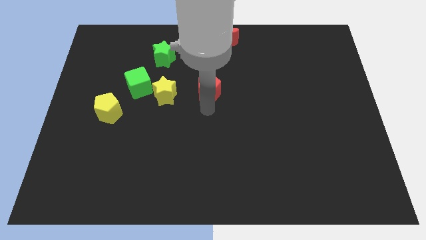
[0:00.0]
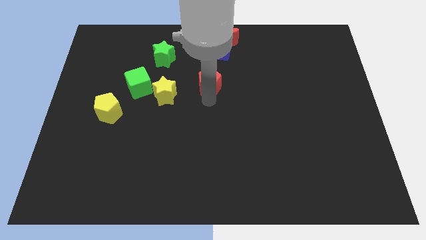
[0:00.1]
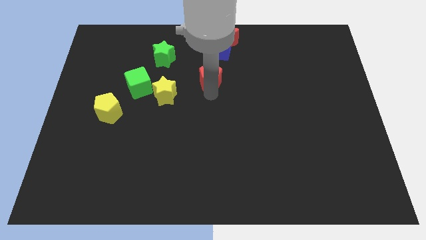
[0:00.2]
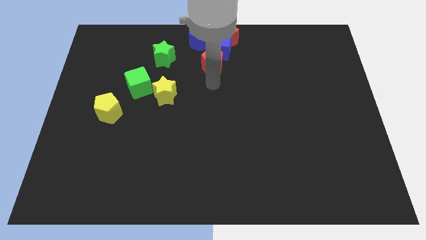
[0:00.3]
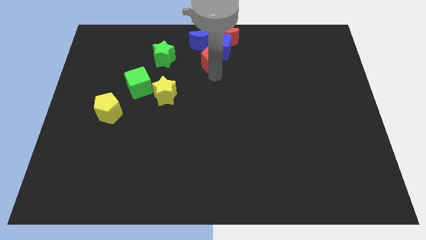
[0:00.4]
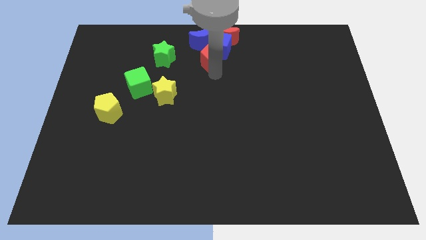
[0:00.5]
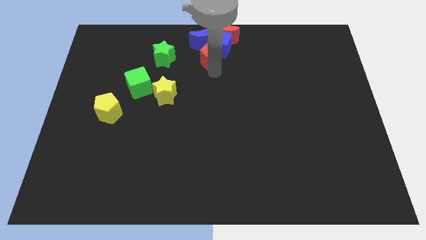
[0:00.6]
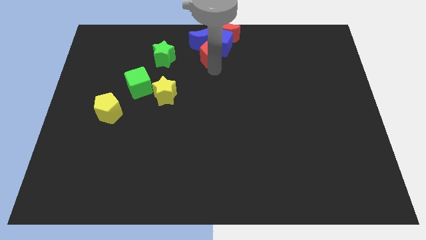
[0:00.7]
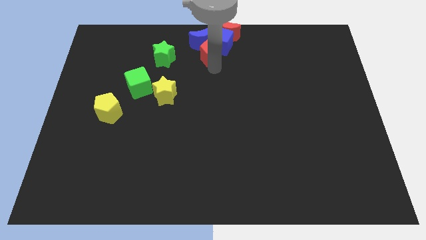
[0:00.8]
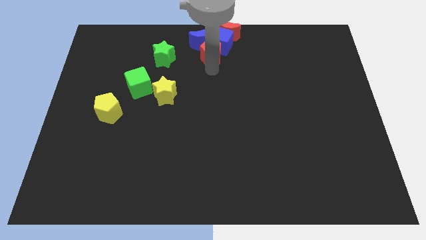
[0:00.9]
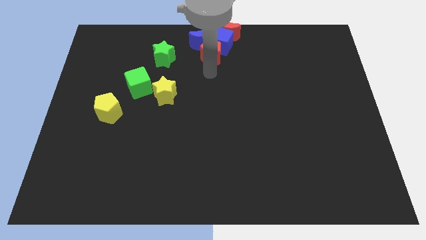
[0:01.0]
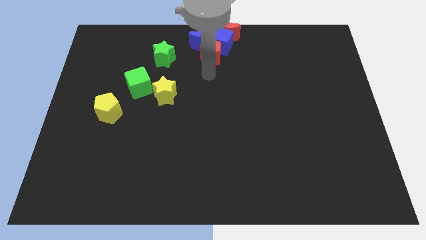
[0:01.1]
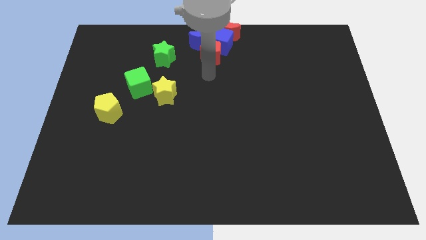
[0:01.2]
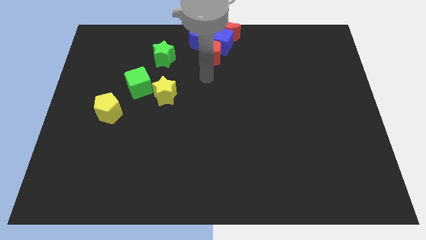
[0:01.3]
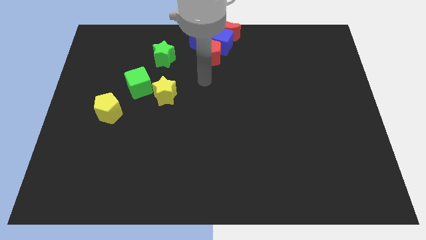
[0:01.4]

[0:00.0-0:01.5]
push the red pentagon into the group of blue and red blocks

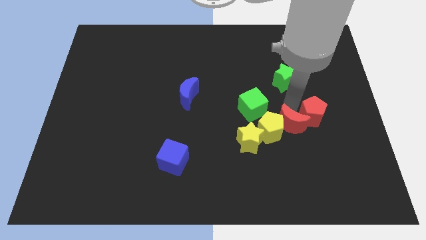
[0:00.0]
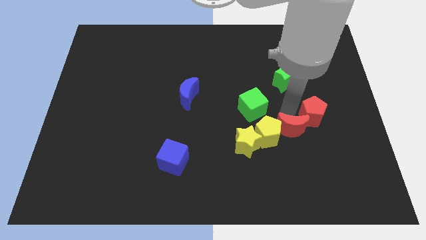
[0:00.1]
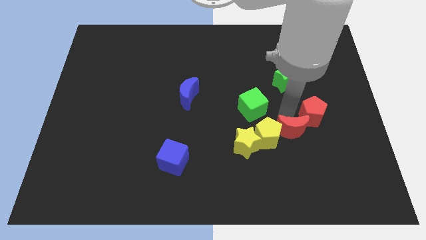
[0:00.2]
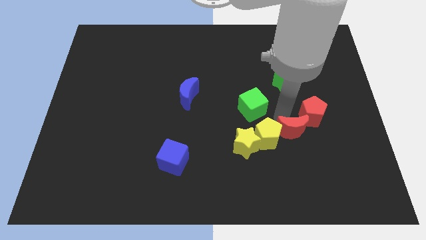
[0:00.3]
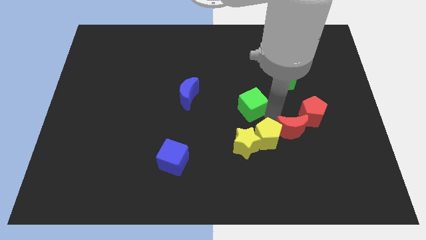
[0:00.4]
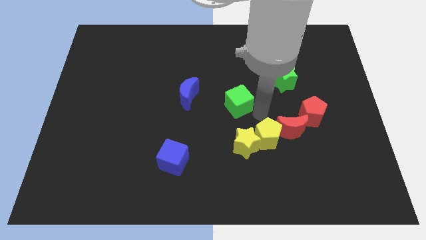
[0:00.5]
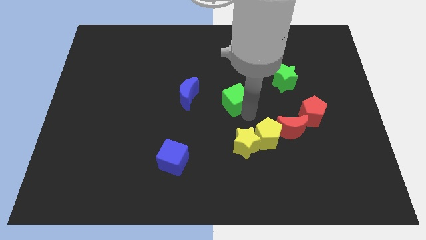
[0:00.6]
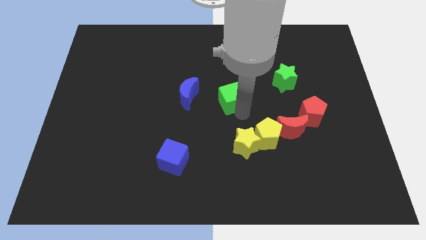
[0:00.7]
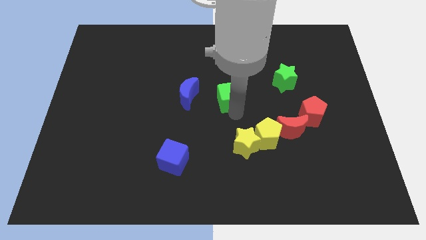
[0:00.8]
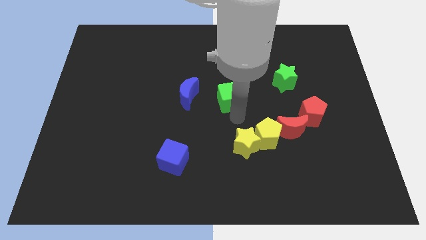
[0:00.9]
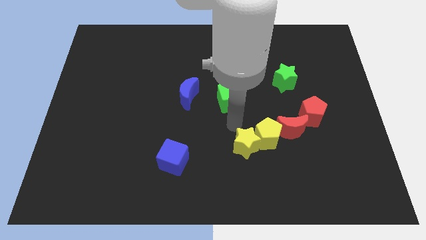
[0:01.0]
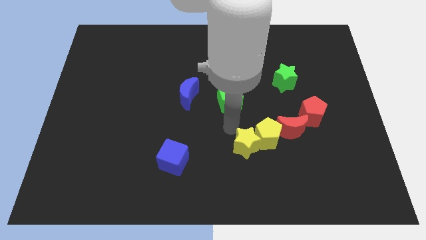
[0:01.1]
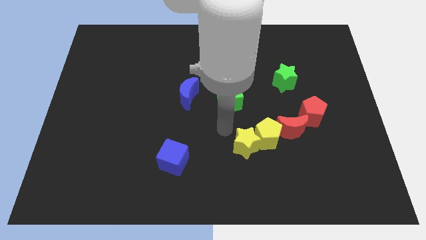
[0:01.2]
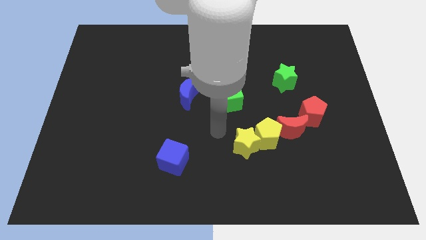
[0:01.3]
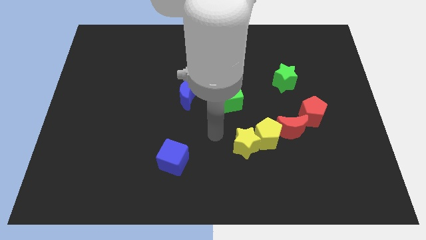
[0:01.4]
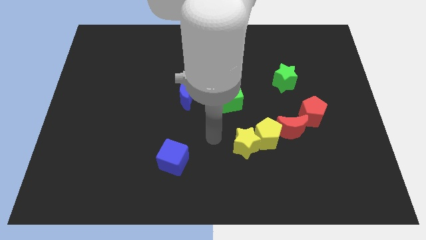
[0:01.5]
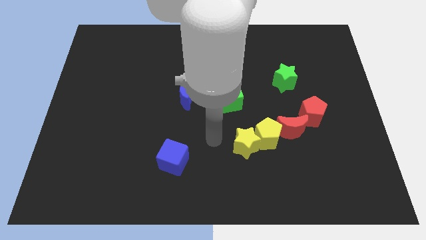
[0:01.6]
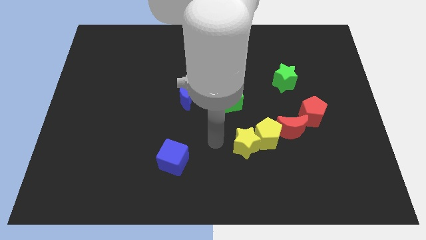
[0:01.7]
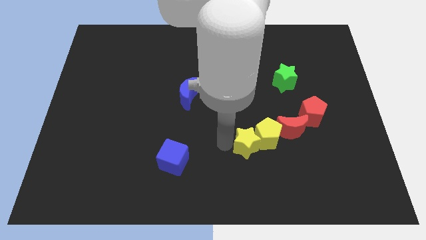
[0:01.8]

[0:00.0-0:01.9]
separate green cube from the yellow pentagon

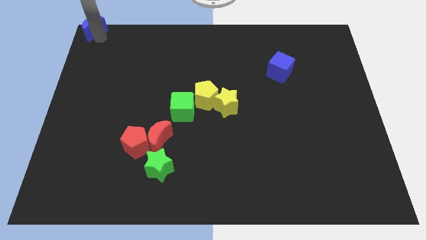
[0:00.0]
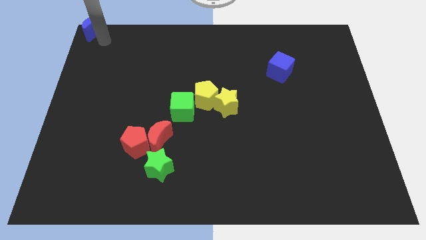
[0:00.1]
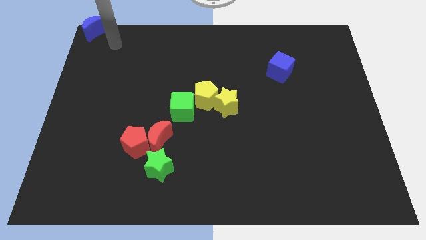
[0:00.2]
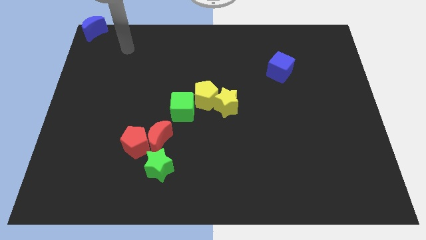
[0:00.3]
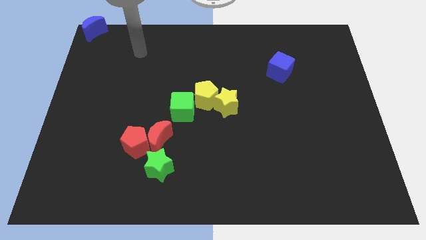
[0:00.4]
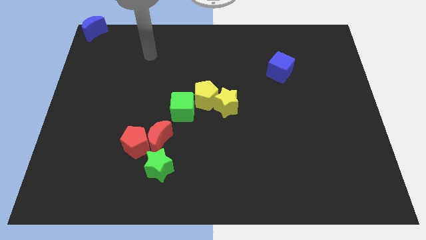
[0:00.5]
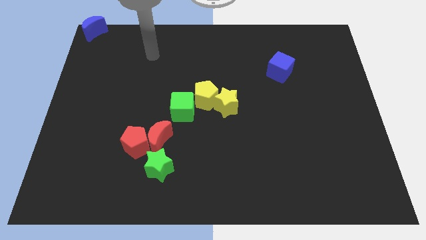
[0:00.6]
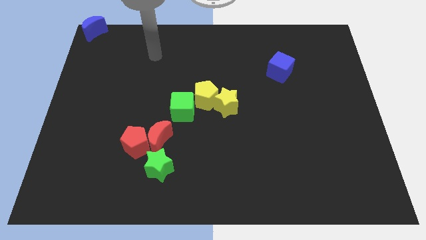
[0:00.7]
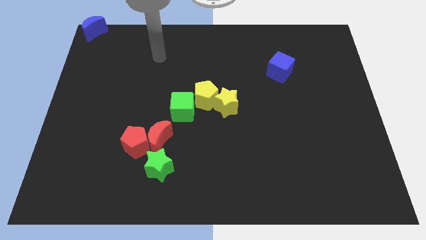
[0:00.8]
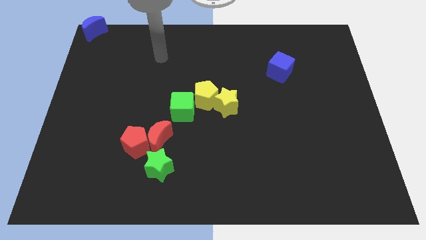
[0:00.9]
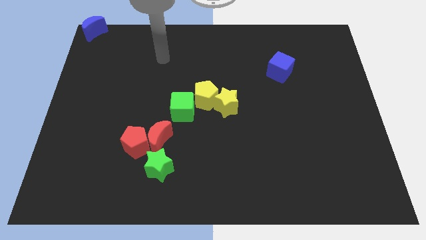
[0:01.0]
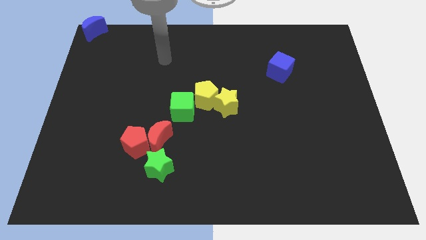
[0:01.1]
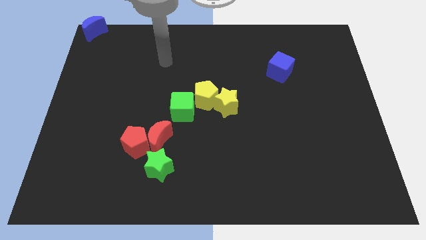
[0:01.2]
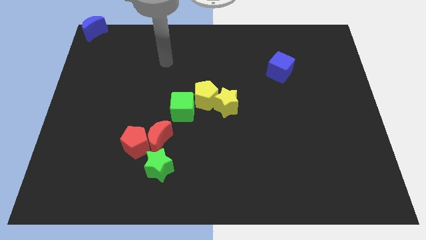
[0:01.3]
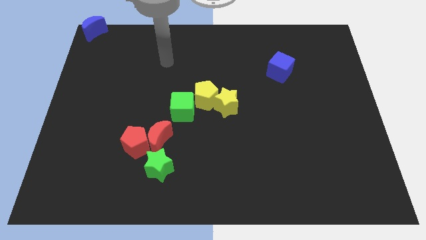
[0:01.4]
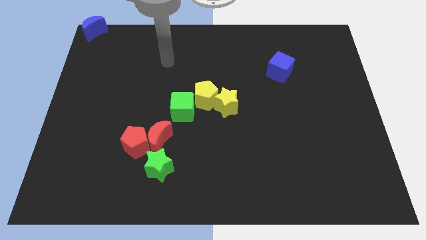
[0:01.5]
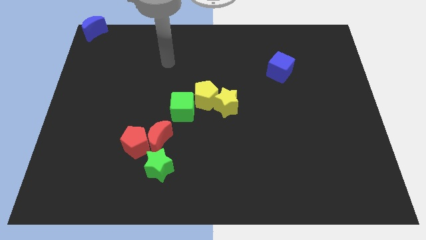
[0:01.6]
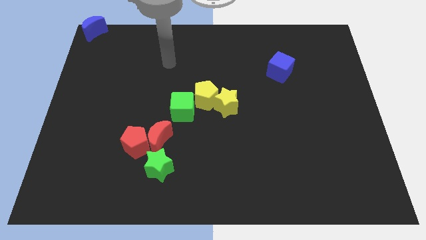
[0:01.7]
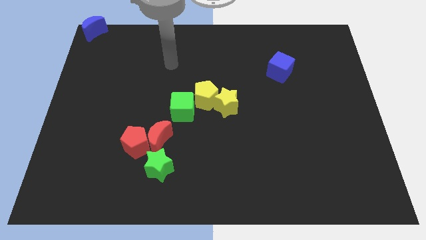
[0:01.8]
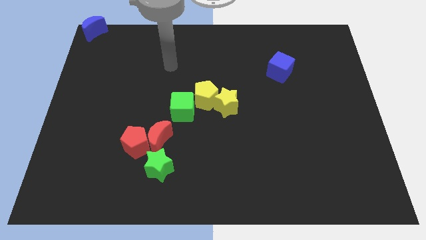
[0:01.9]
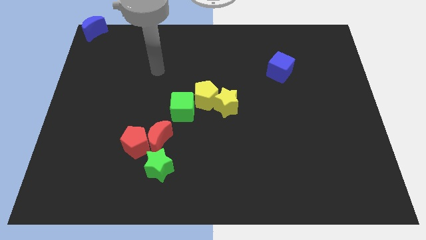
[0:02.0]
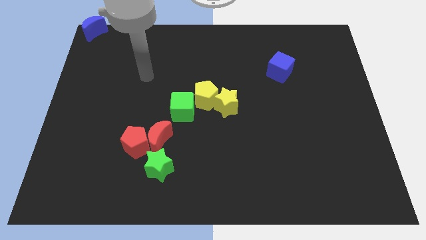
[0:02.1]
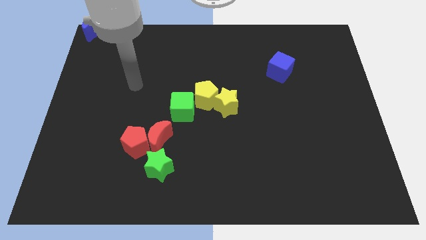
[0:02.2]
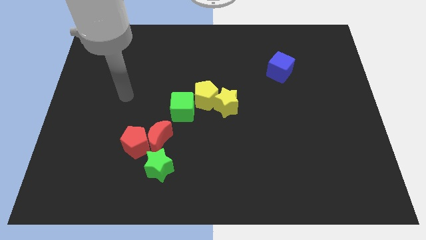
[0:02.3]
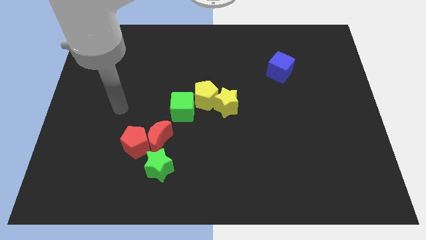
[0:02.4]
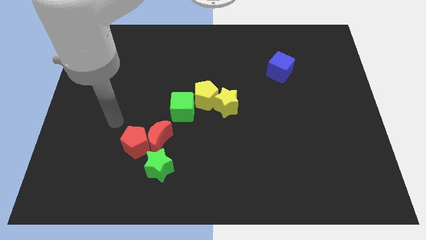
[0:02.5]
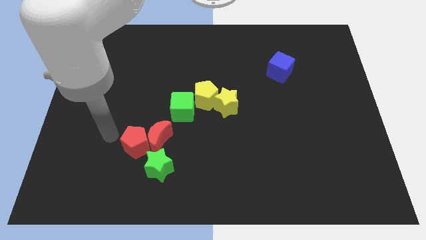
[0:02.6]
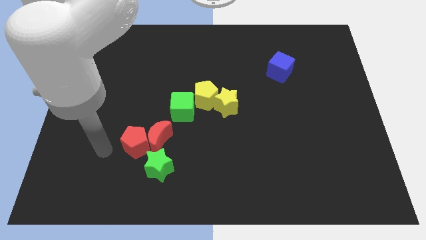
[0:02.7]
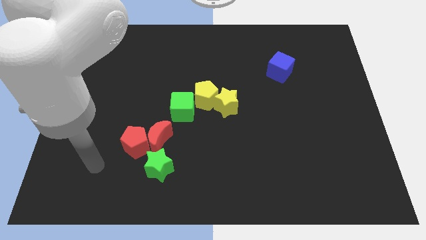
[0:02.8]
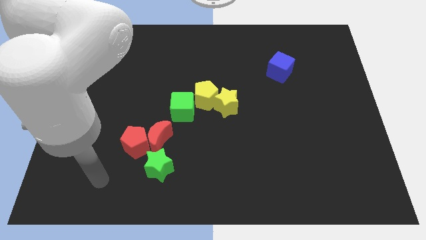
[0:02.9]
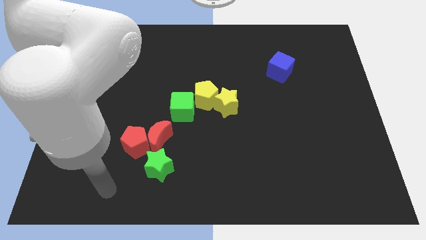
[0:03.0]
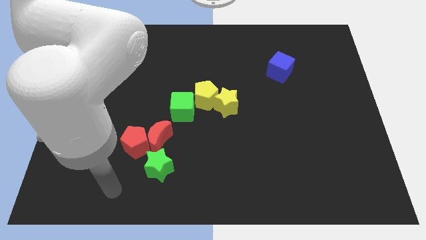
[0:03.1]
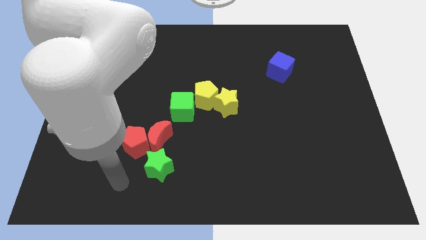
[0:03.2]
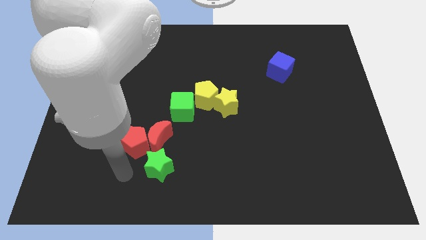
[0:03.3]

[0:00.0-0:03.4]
move your arm to the bottom of the red pentagon

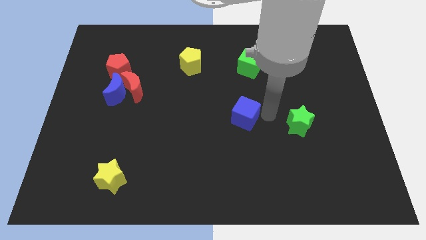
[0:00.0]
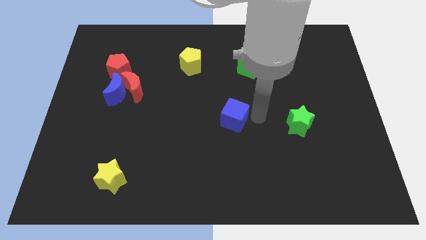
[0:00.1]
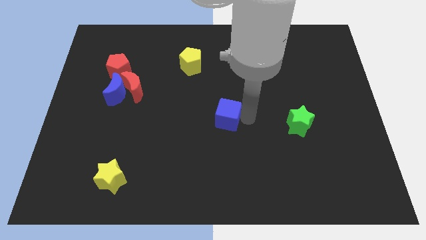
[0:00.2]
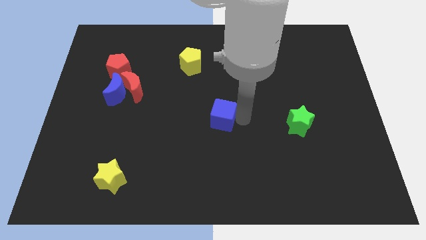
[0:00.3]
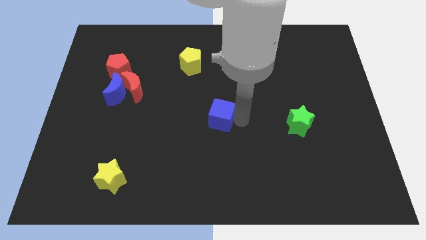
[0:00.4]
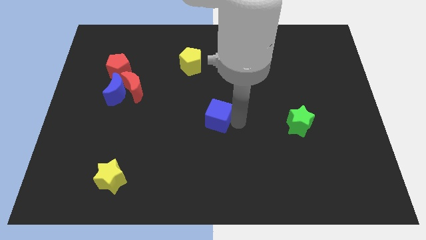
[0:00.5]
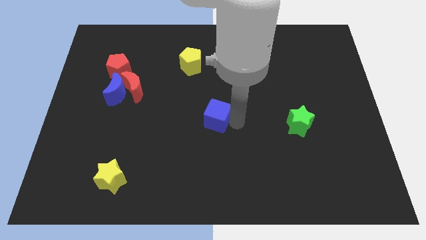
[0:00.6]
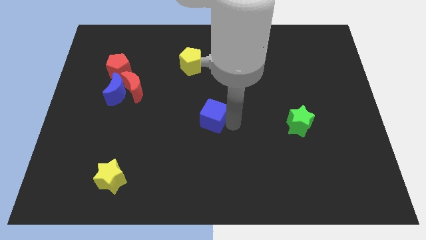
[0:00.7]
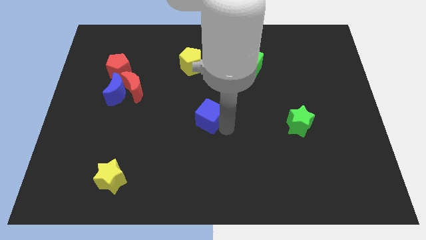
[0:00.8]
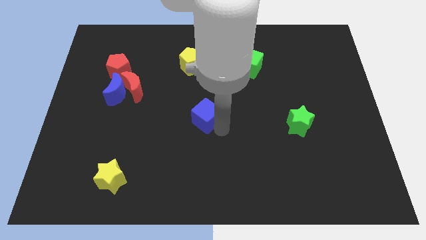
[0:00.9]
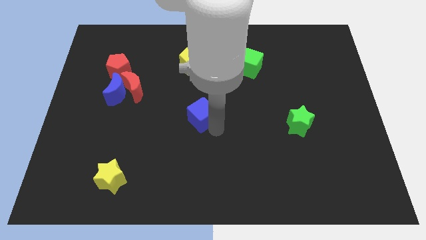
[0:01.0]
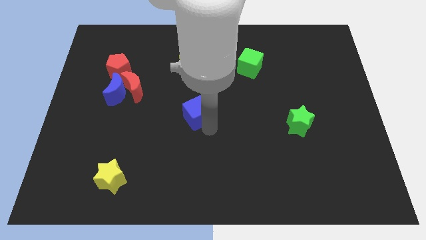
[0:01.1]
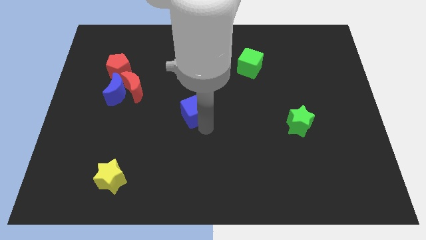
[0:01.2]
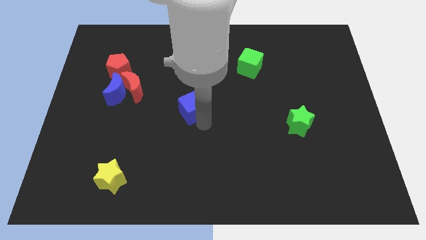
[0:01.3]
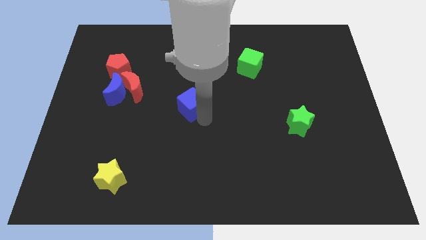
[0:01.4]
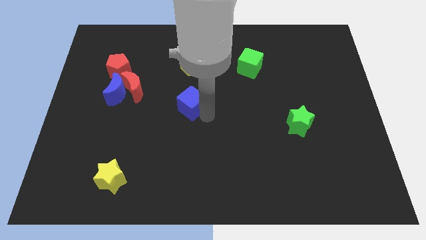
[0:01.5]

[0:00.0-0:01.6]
put the blue cube below the yellow pentagon

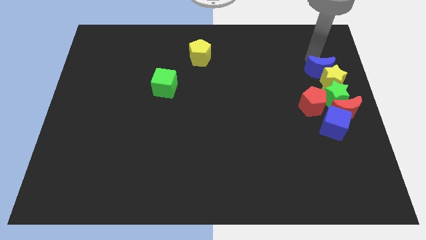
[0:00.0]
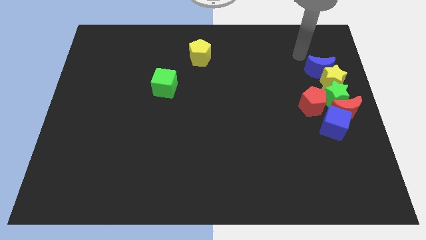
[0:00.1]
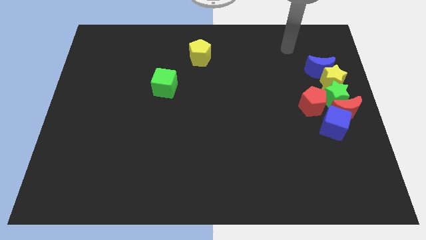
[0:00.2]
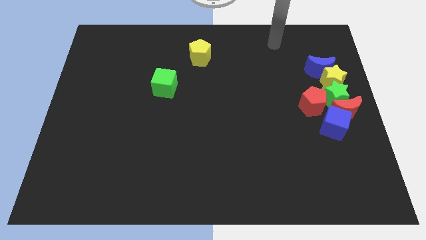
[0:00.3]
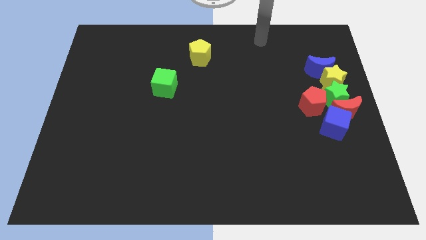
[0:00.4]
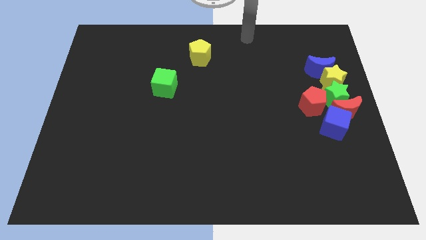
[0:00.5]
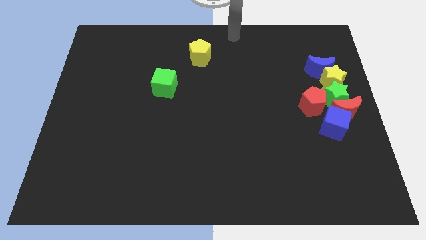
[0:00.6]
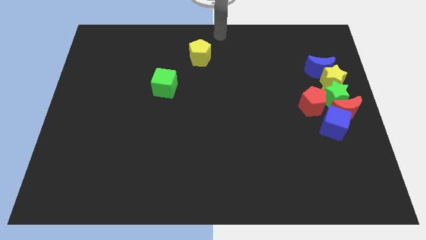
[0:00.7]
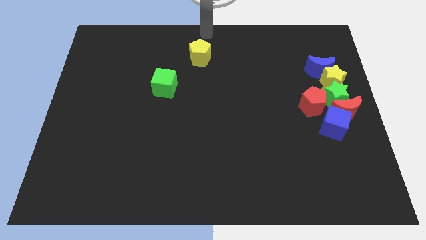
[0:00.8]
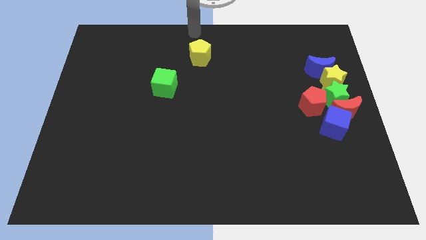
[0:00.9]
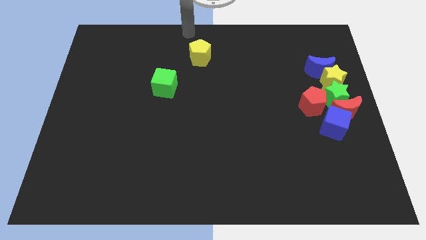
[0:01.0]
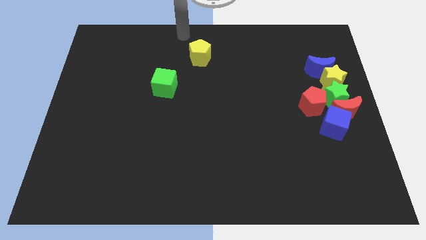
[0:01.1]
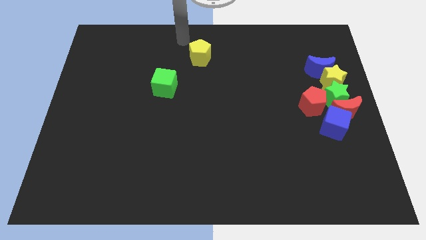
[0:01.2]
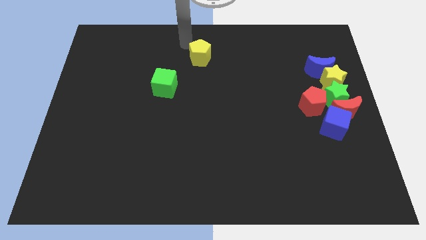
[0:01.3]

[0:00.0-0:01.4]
point your arm at the top side of the yellow pentagon
